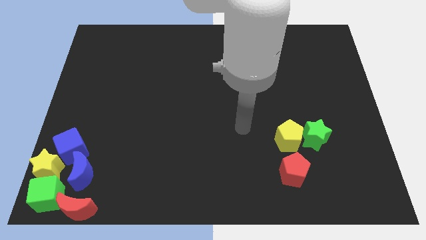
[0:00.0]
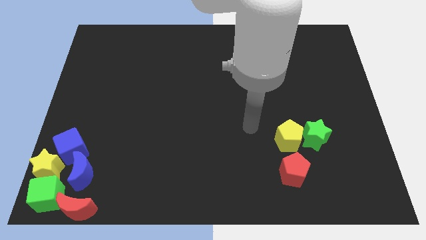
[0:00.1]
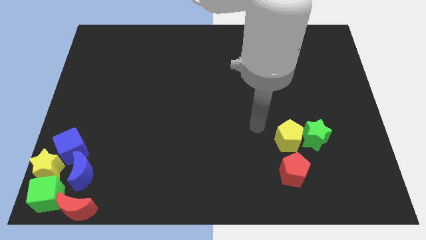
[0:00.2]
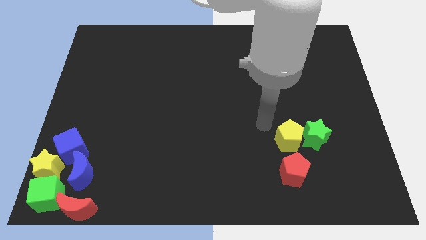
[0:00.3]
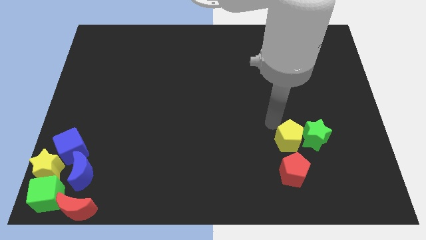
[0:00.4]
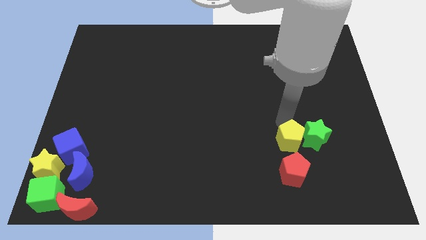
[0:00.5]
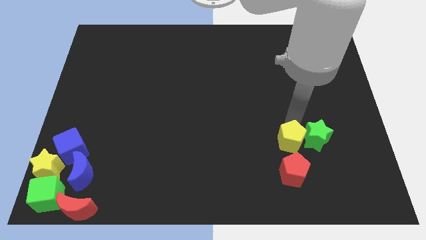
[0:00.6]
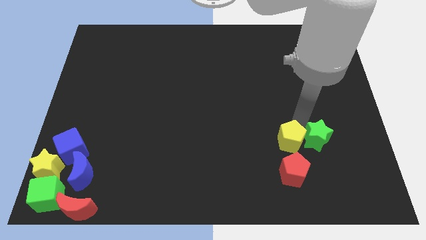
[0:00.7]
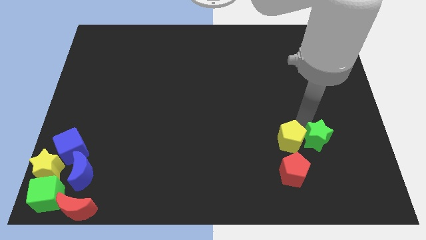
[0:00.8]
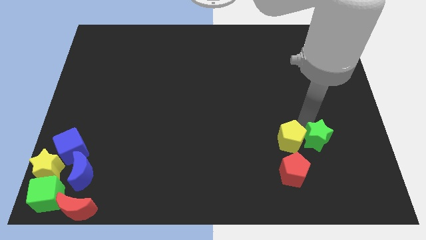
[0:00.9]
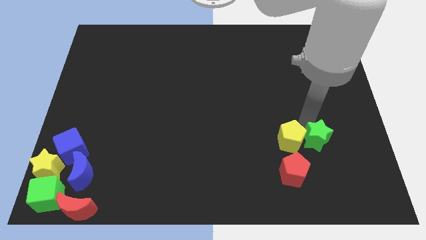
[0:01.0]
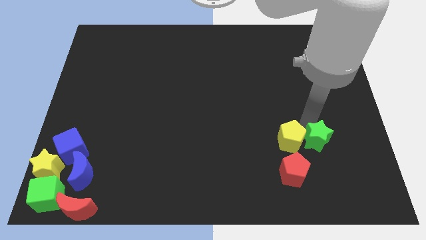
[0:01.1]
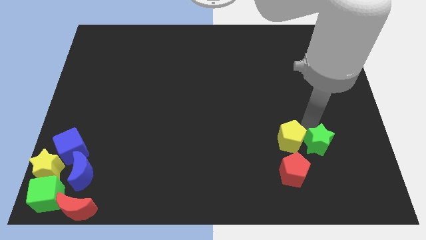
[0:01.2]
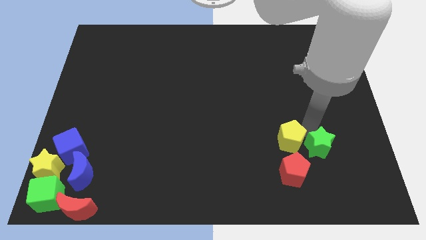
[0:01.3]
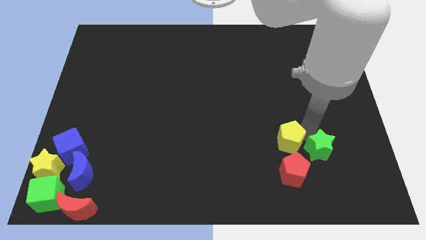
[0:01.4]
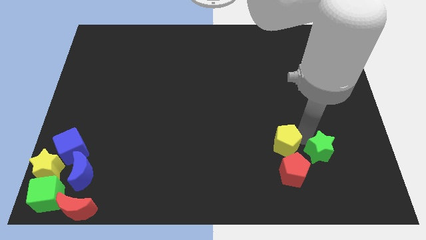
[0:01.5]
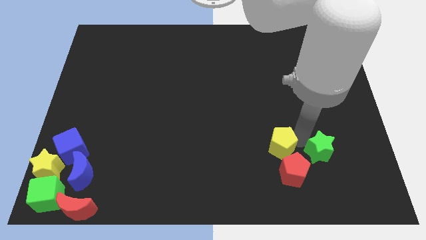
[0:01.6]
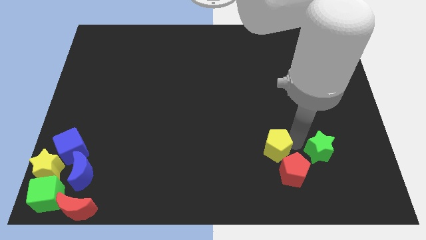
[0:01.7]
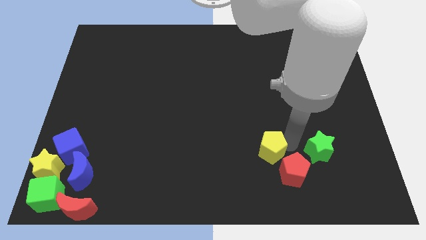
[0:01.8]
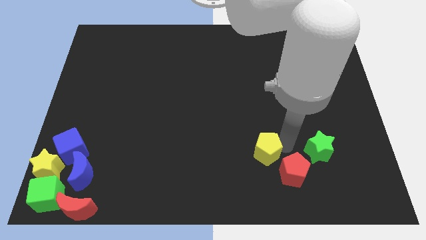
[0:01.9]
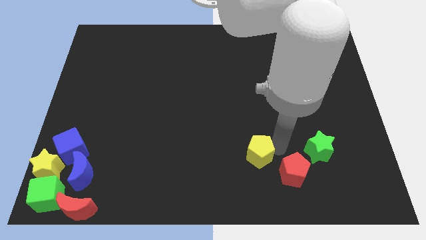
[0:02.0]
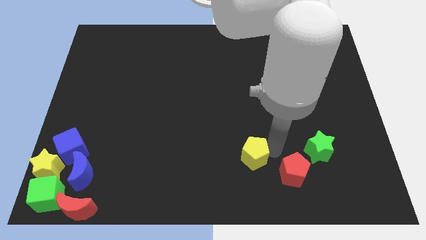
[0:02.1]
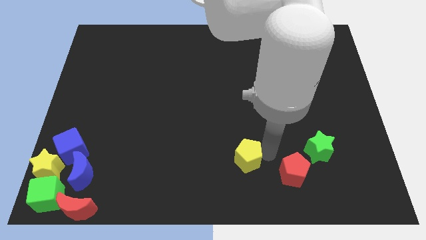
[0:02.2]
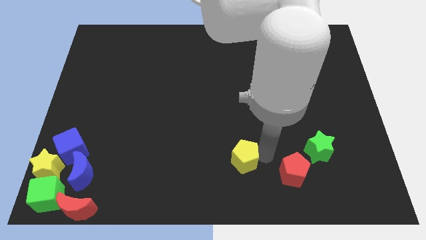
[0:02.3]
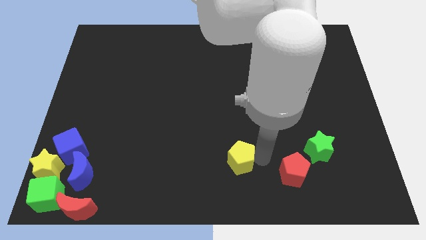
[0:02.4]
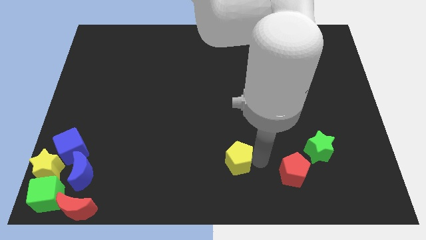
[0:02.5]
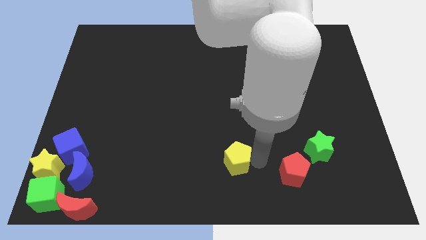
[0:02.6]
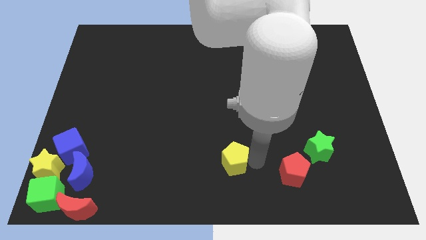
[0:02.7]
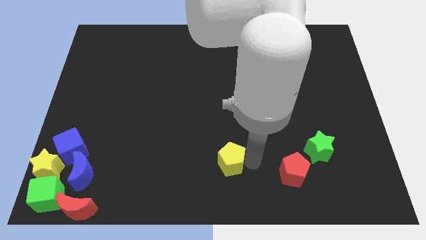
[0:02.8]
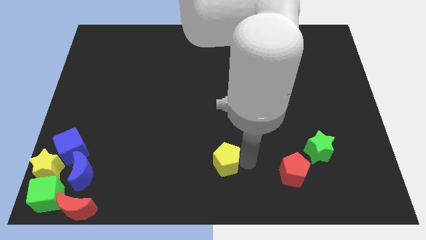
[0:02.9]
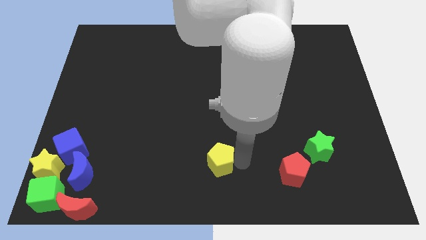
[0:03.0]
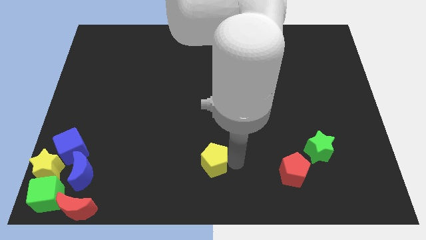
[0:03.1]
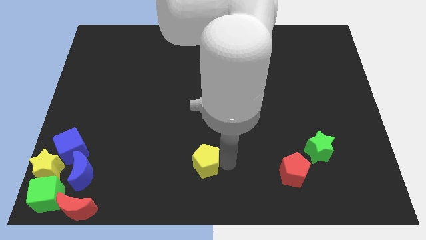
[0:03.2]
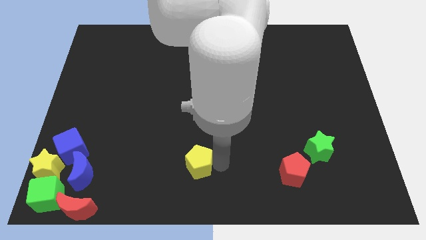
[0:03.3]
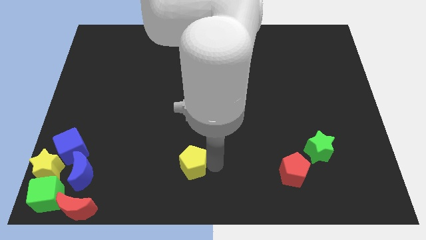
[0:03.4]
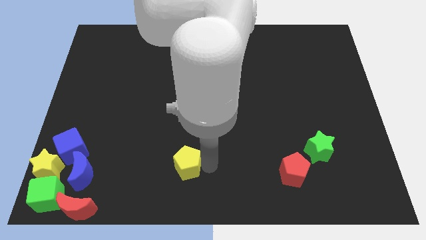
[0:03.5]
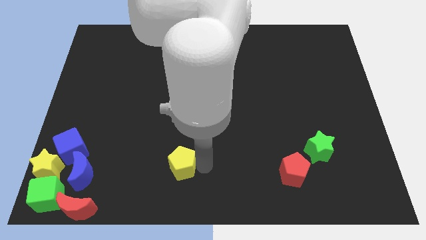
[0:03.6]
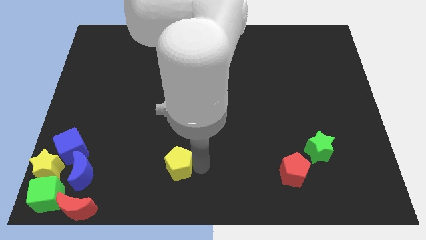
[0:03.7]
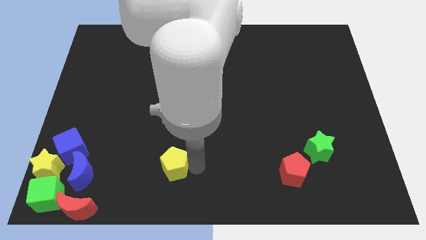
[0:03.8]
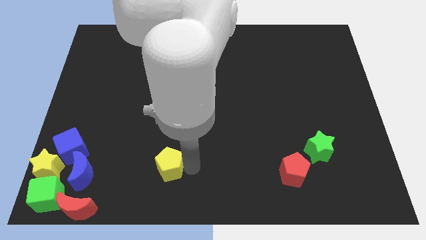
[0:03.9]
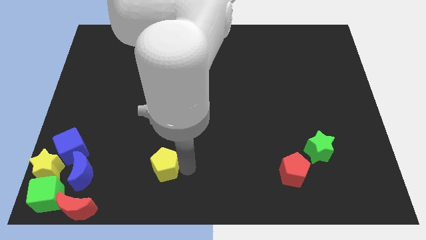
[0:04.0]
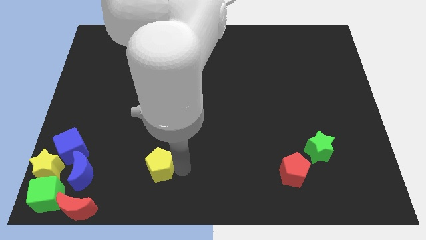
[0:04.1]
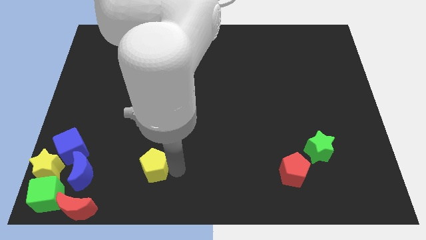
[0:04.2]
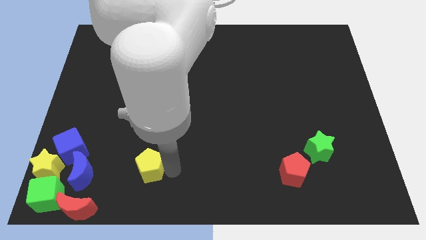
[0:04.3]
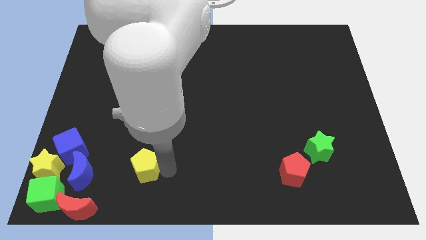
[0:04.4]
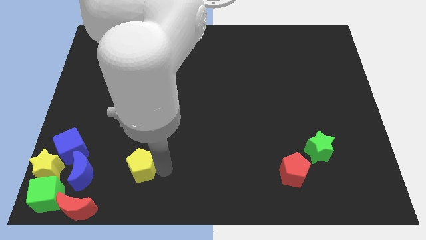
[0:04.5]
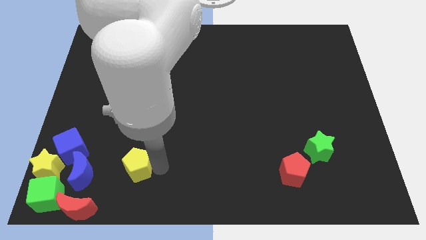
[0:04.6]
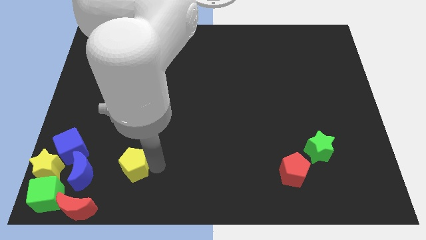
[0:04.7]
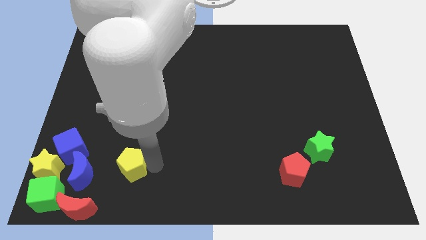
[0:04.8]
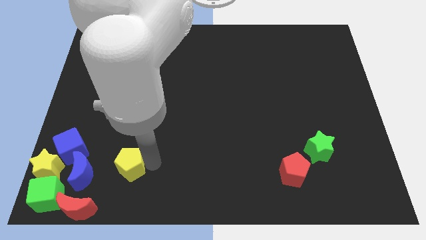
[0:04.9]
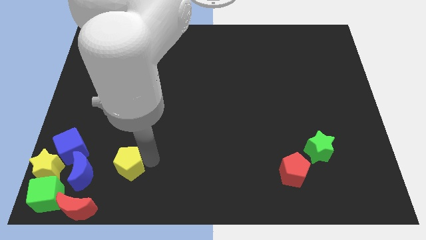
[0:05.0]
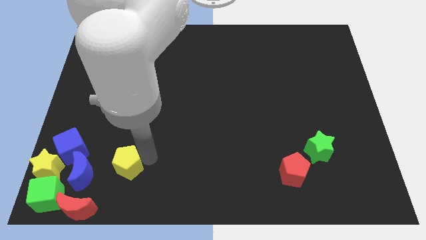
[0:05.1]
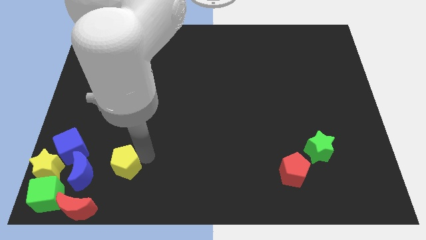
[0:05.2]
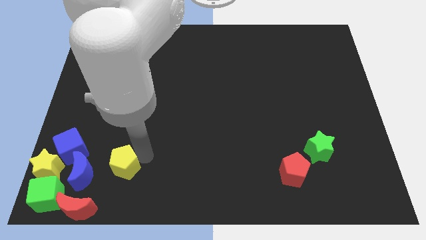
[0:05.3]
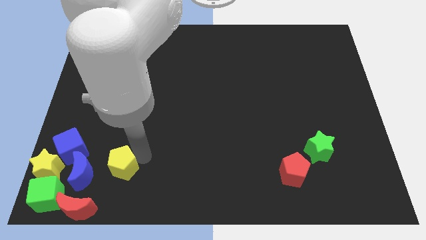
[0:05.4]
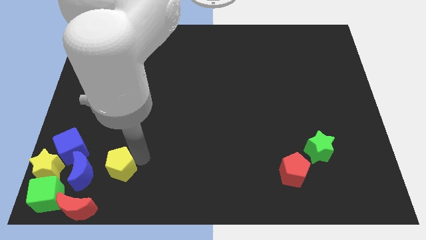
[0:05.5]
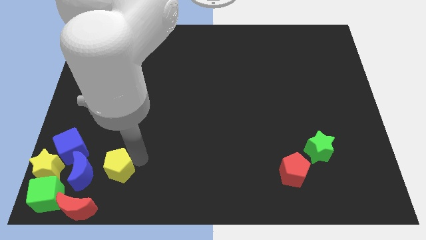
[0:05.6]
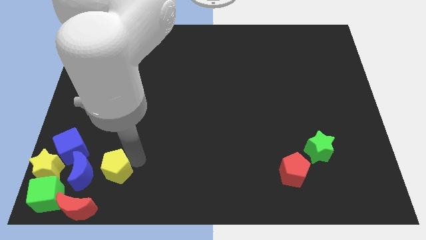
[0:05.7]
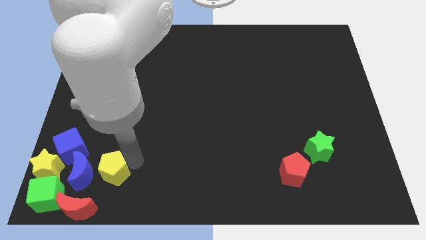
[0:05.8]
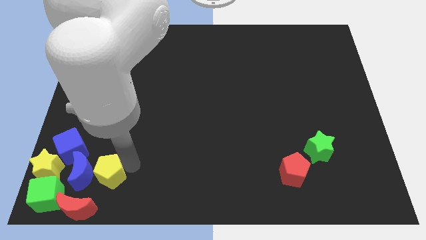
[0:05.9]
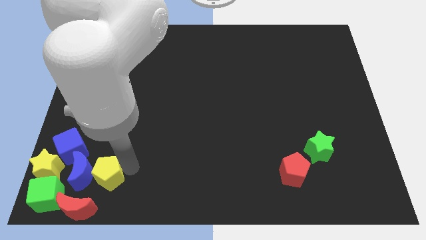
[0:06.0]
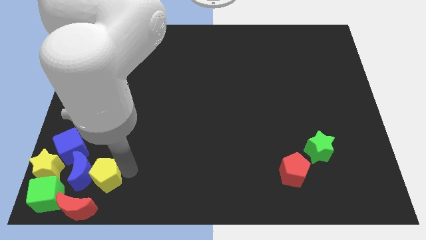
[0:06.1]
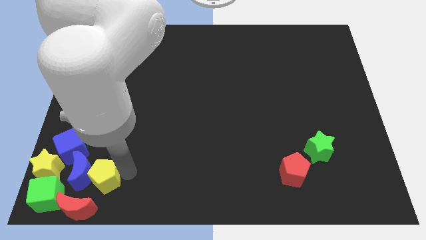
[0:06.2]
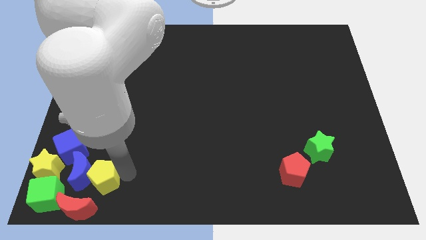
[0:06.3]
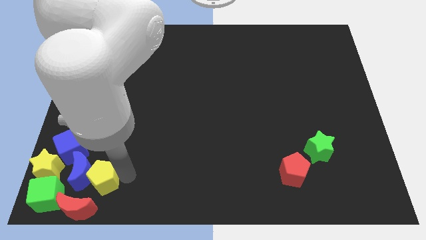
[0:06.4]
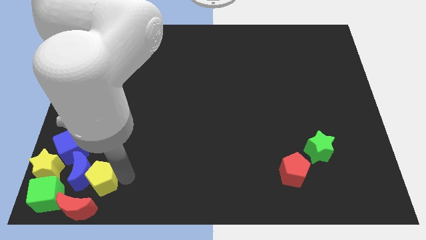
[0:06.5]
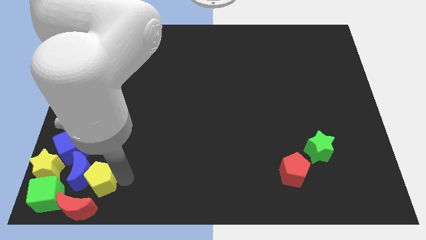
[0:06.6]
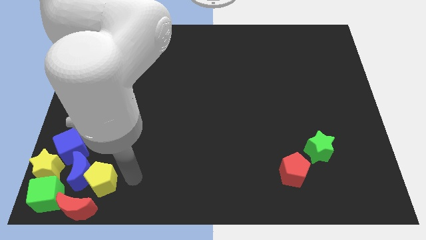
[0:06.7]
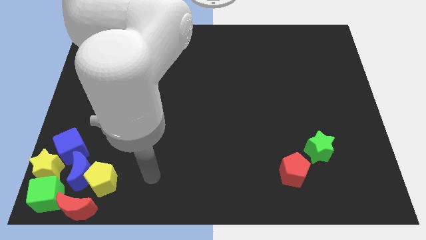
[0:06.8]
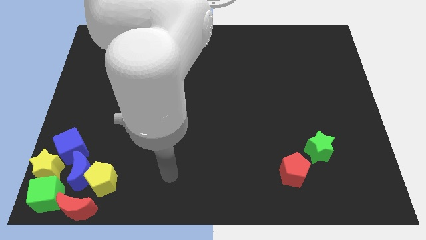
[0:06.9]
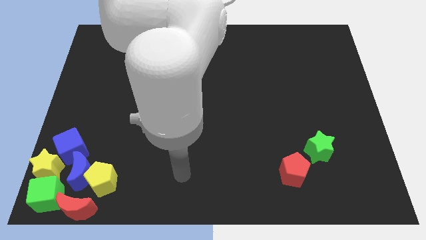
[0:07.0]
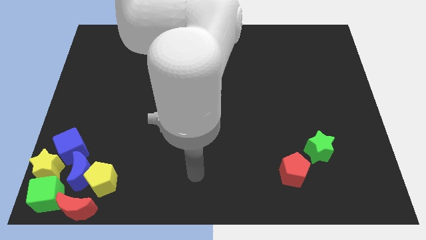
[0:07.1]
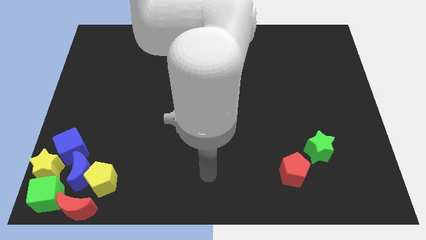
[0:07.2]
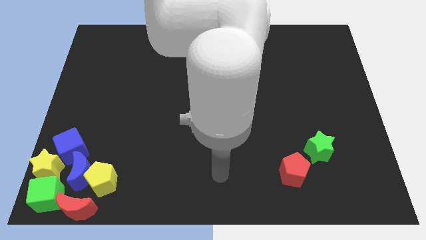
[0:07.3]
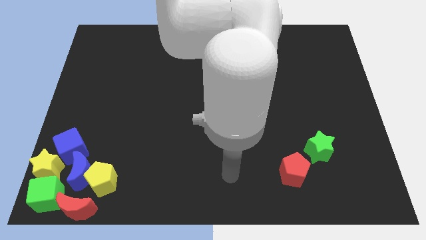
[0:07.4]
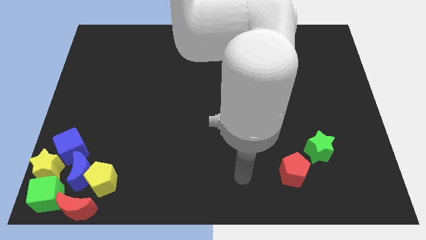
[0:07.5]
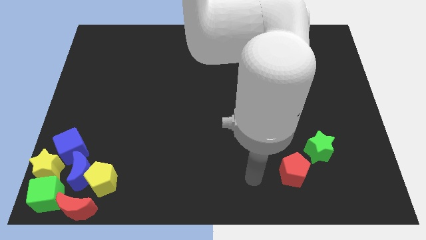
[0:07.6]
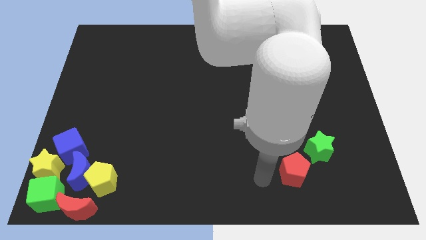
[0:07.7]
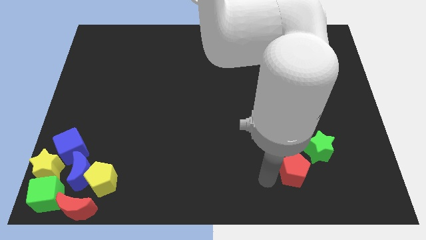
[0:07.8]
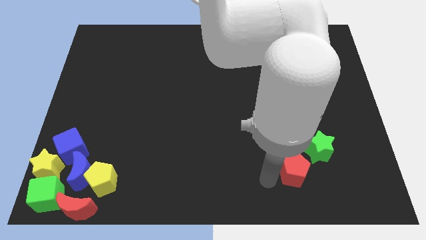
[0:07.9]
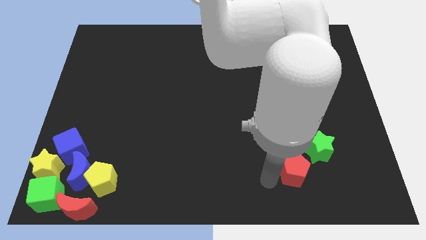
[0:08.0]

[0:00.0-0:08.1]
slide the yellow pentagon at the right side of the blue crescent

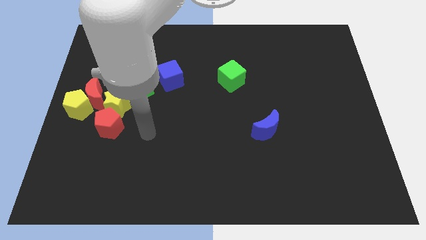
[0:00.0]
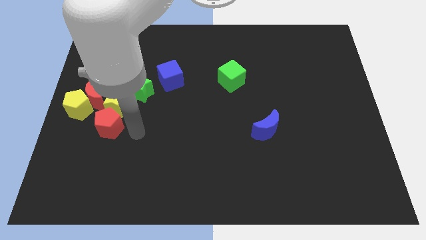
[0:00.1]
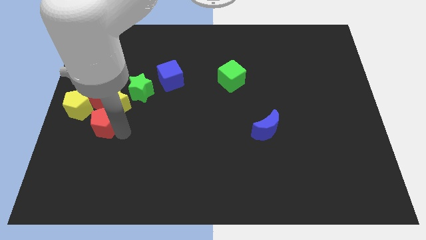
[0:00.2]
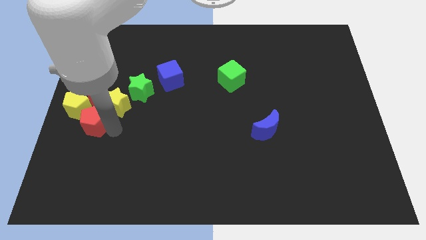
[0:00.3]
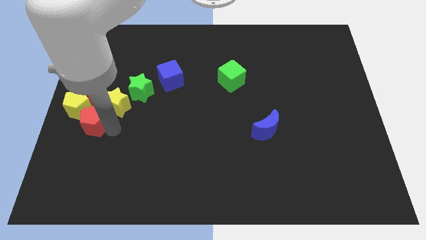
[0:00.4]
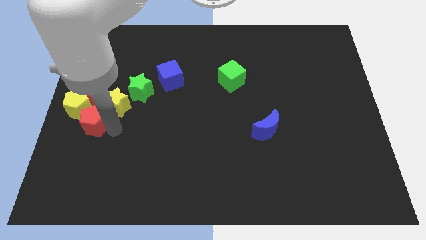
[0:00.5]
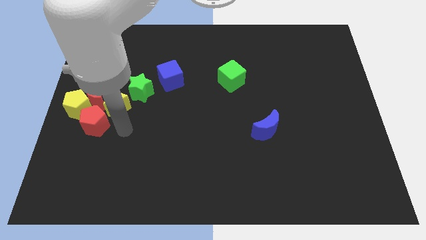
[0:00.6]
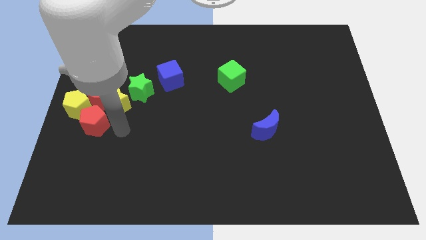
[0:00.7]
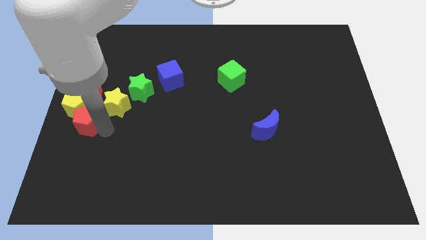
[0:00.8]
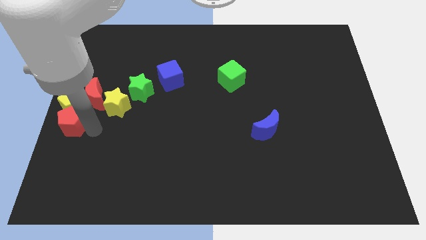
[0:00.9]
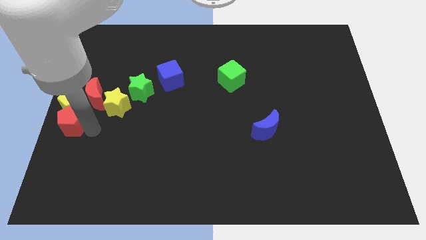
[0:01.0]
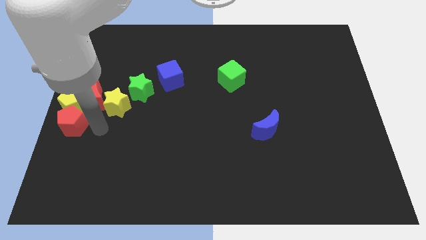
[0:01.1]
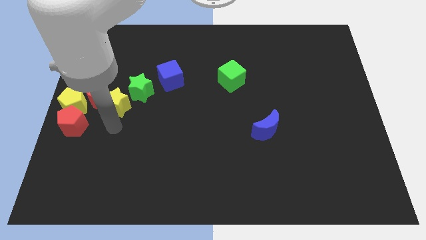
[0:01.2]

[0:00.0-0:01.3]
push the red pentagon to the bottom of the yellow pentagon
